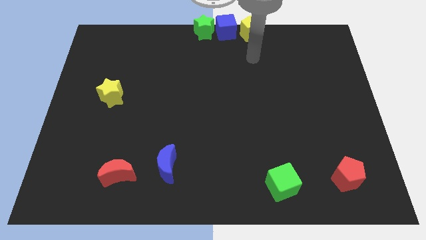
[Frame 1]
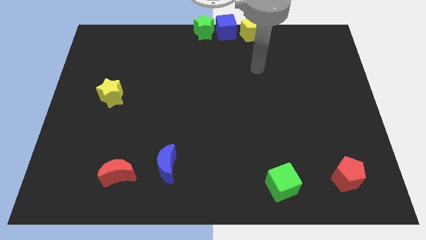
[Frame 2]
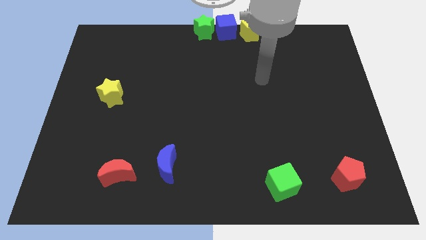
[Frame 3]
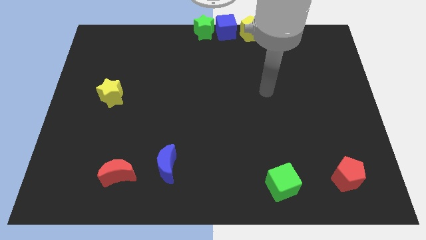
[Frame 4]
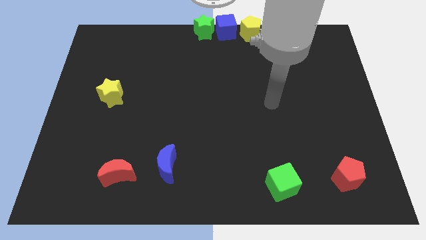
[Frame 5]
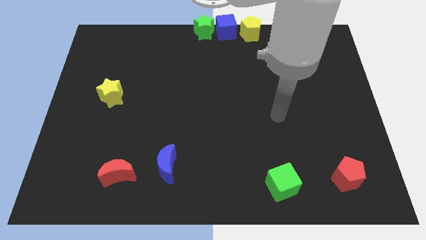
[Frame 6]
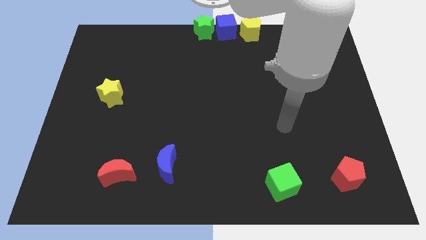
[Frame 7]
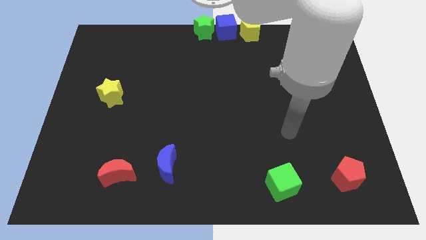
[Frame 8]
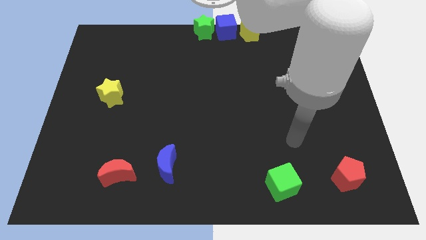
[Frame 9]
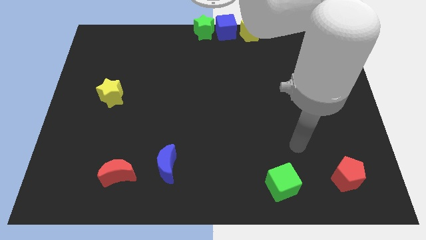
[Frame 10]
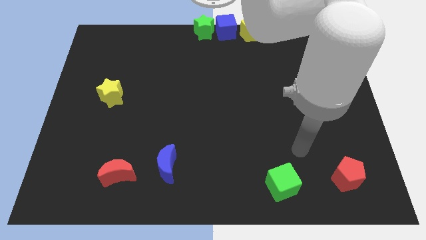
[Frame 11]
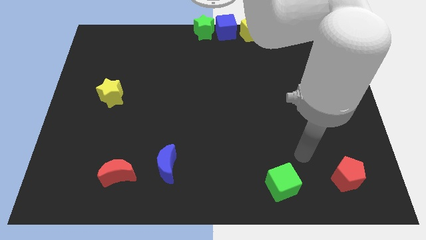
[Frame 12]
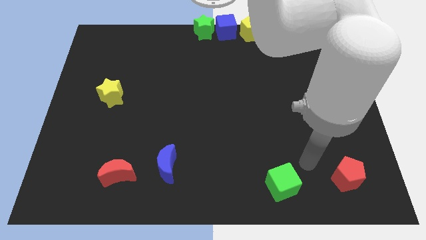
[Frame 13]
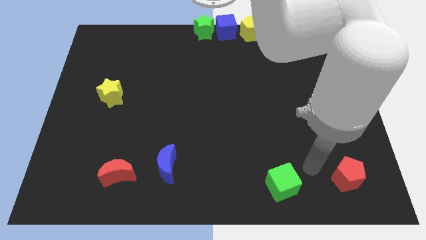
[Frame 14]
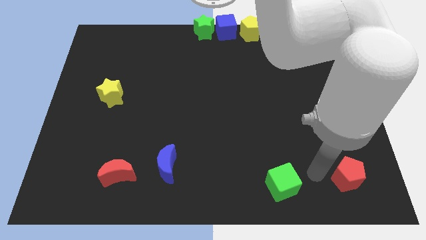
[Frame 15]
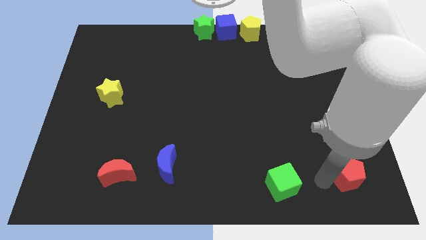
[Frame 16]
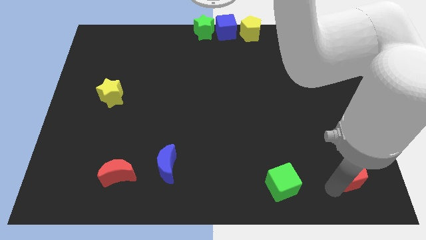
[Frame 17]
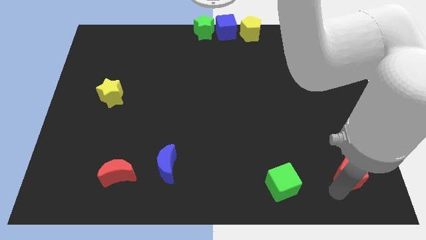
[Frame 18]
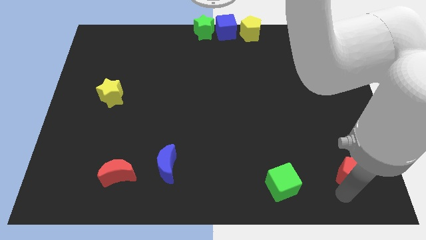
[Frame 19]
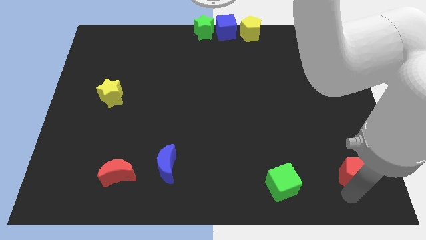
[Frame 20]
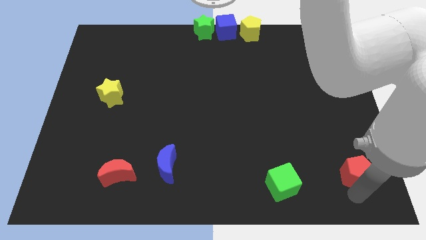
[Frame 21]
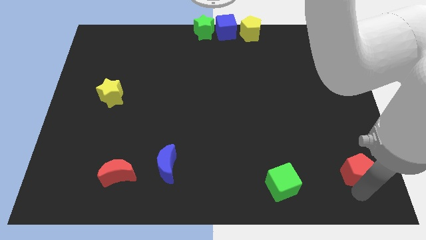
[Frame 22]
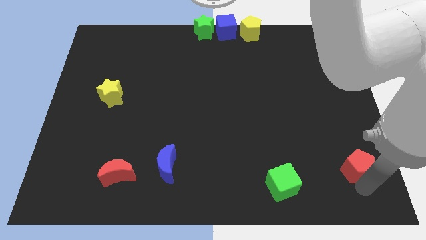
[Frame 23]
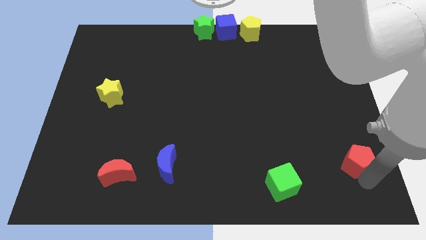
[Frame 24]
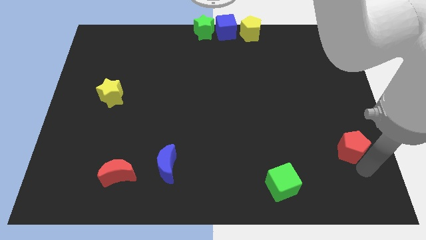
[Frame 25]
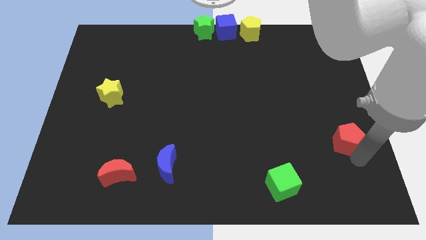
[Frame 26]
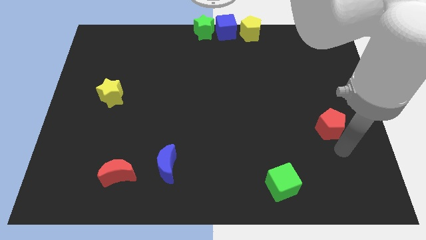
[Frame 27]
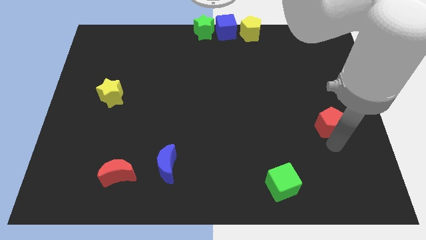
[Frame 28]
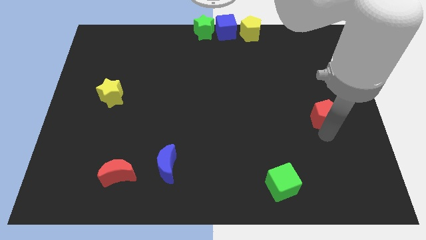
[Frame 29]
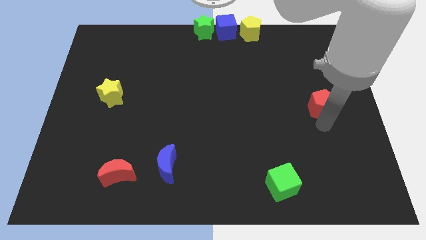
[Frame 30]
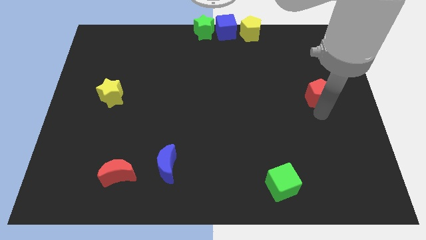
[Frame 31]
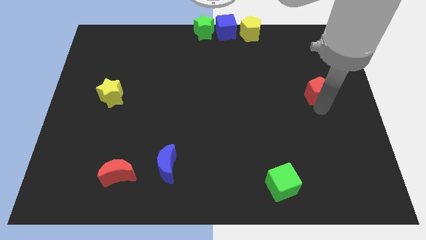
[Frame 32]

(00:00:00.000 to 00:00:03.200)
move red pentagon upwards

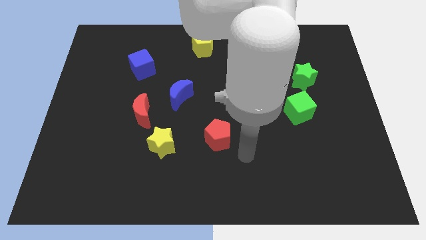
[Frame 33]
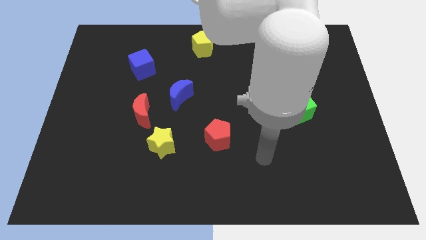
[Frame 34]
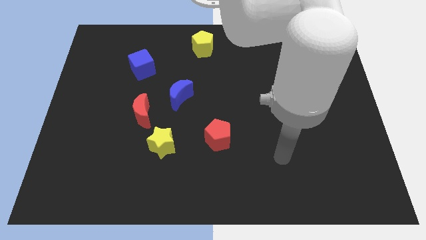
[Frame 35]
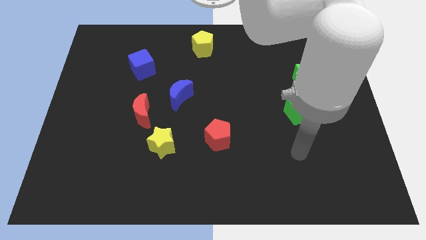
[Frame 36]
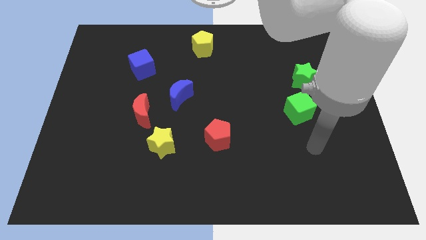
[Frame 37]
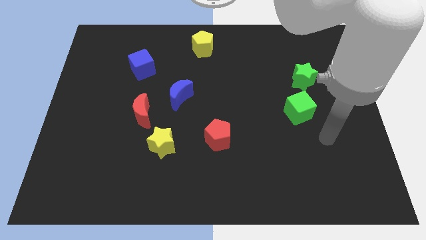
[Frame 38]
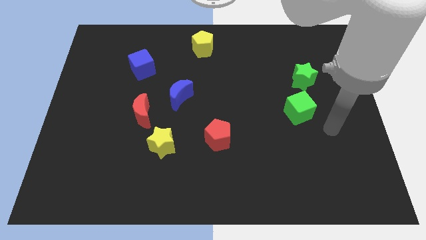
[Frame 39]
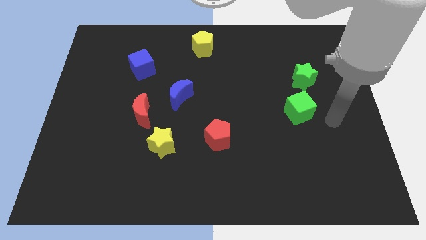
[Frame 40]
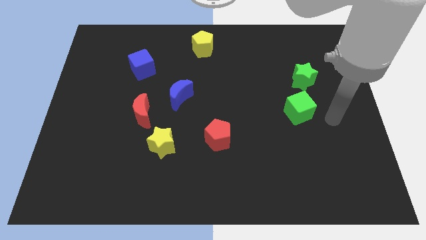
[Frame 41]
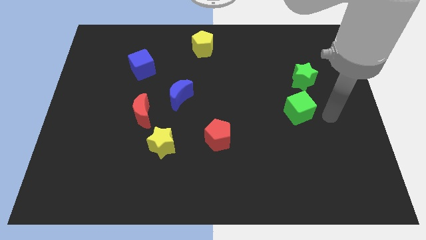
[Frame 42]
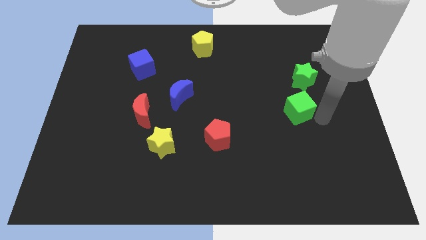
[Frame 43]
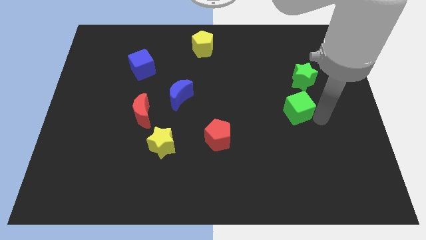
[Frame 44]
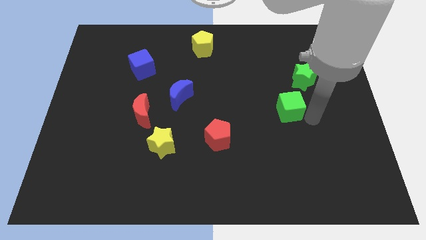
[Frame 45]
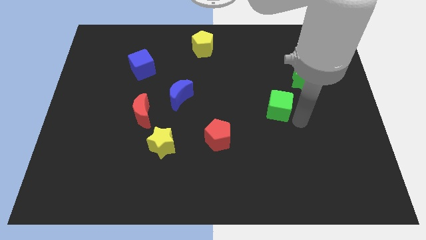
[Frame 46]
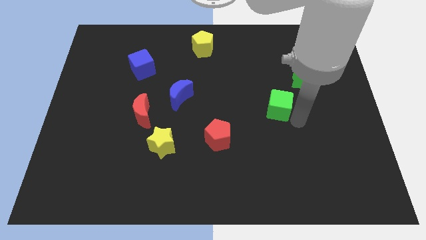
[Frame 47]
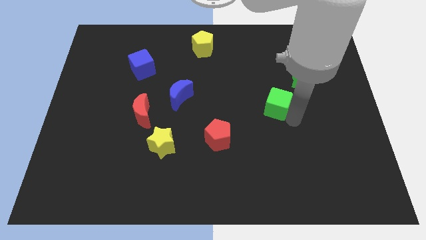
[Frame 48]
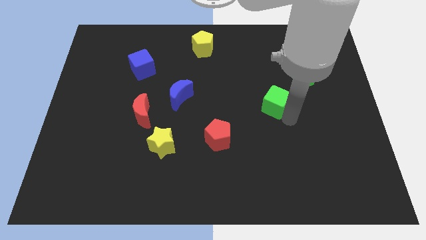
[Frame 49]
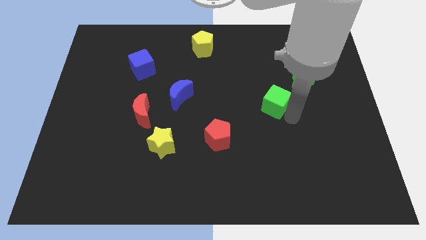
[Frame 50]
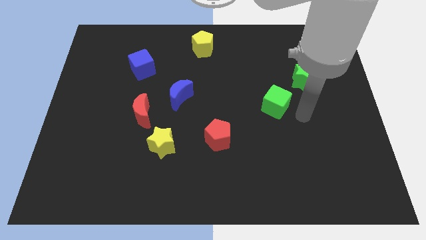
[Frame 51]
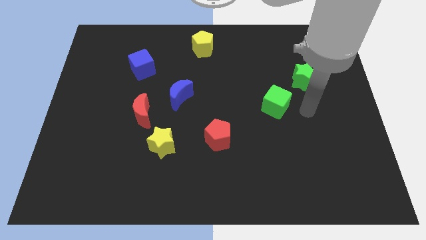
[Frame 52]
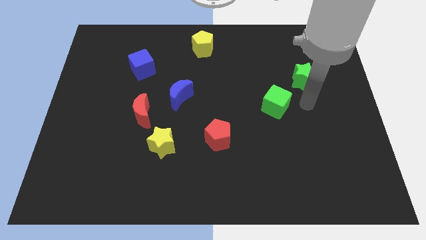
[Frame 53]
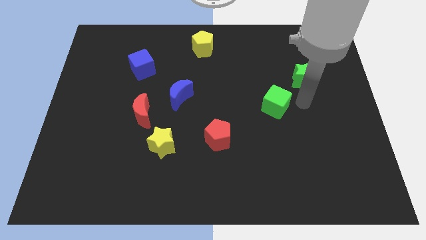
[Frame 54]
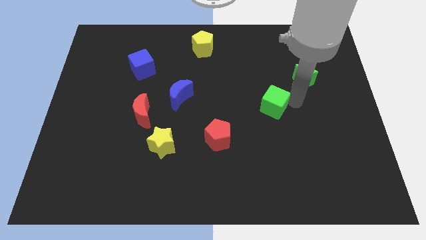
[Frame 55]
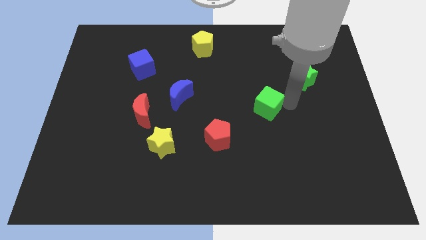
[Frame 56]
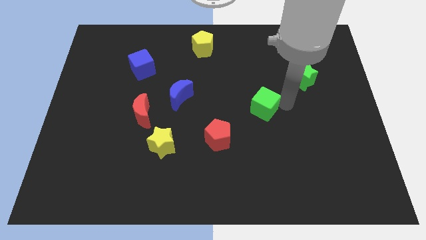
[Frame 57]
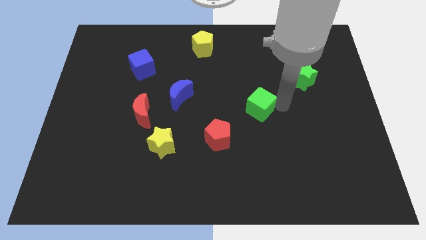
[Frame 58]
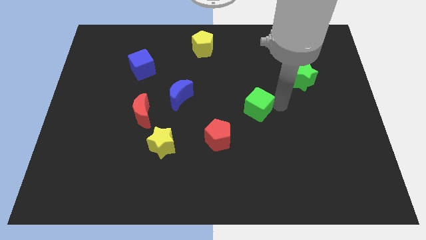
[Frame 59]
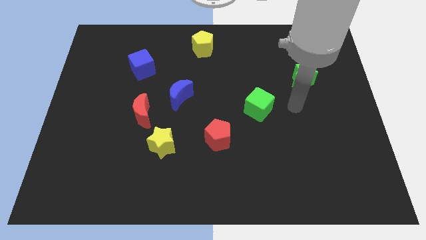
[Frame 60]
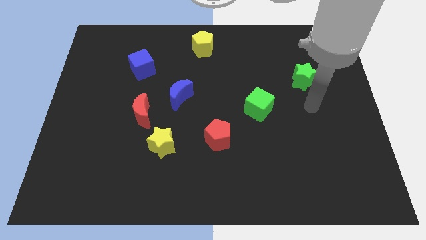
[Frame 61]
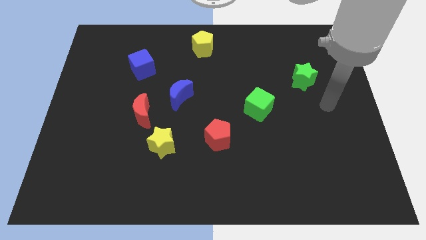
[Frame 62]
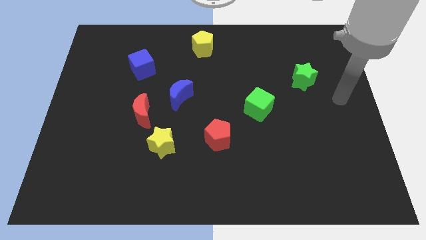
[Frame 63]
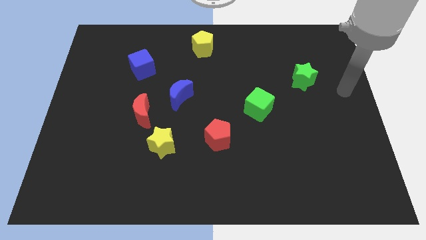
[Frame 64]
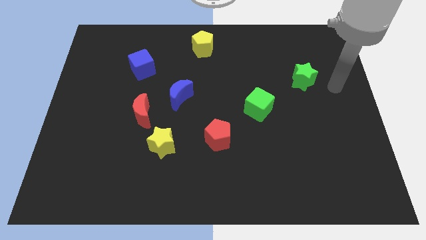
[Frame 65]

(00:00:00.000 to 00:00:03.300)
place the green cube in between the red pentagon and the green star

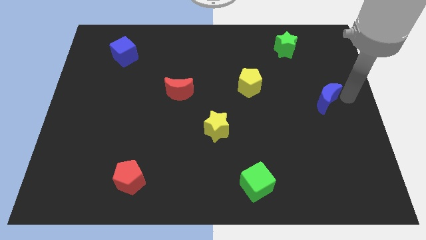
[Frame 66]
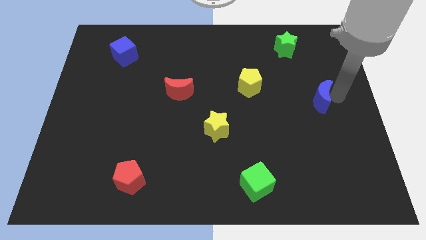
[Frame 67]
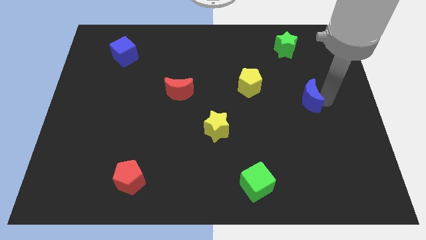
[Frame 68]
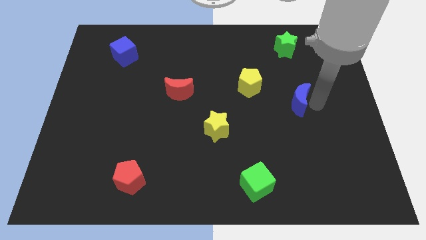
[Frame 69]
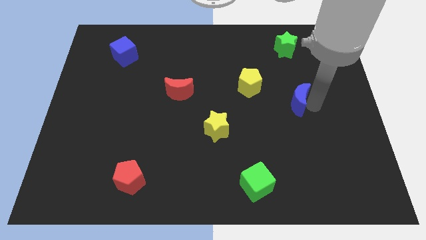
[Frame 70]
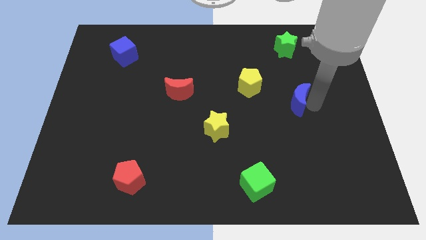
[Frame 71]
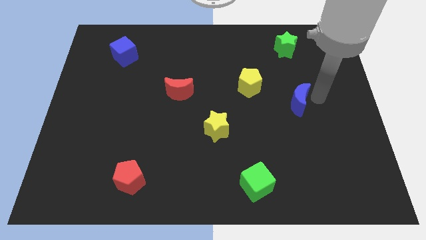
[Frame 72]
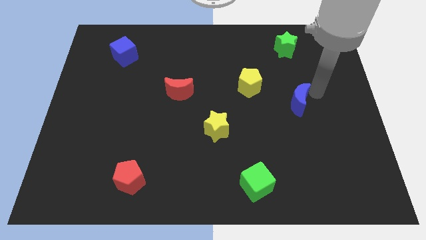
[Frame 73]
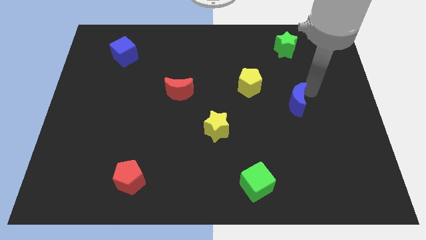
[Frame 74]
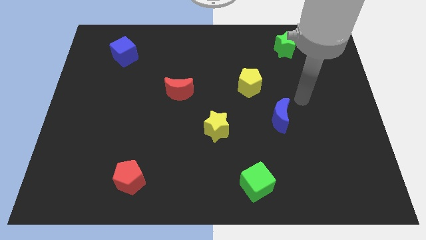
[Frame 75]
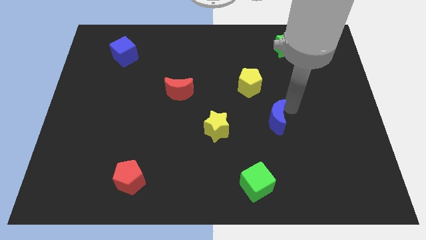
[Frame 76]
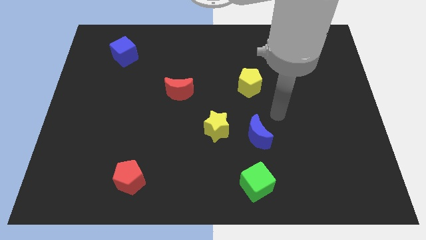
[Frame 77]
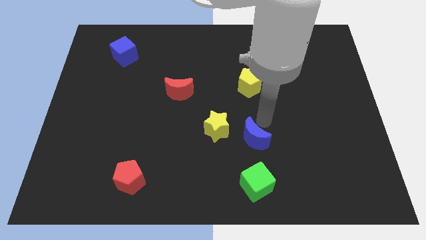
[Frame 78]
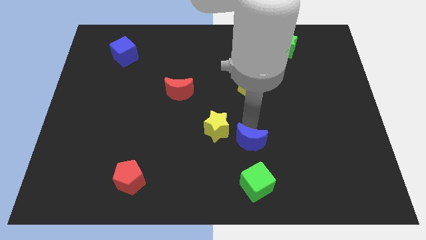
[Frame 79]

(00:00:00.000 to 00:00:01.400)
move the blue moon vertically below the yellow pentagon

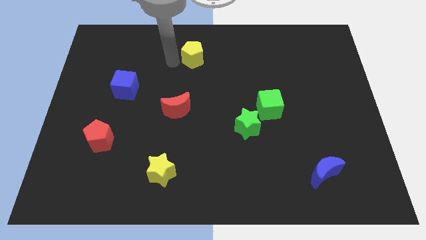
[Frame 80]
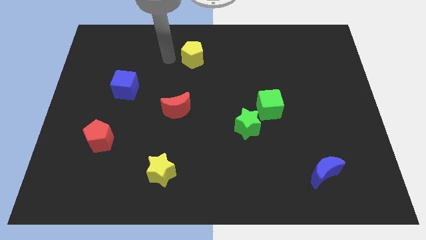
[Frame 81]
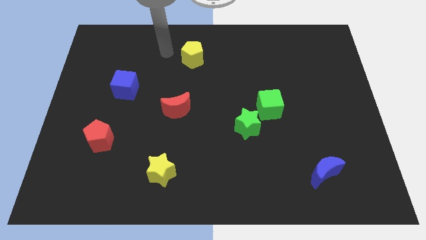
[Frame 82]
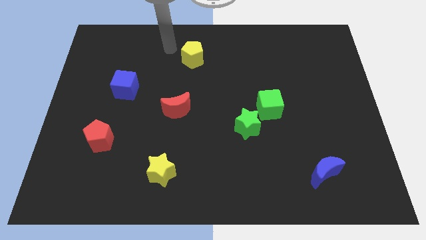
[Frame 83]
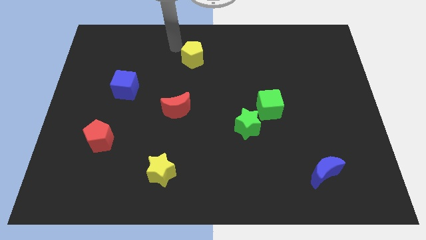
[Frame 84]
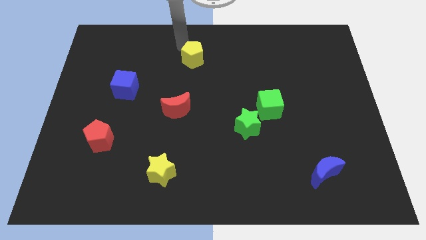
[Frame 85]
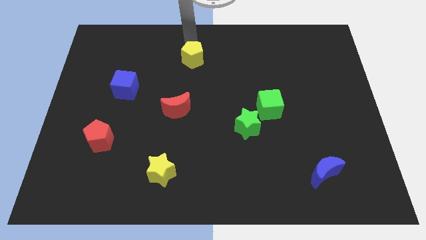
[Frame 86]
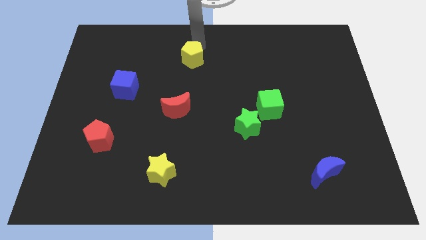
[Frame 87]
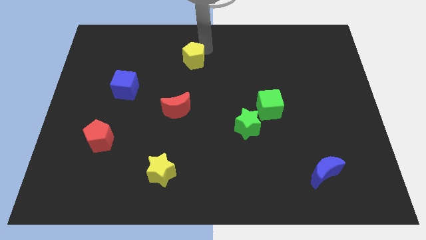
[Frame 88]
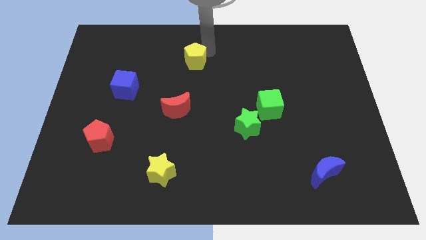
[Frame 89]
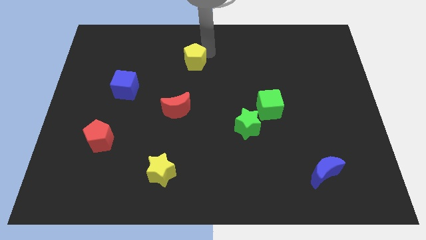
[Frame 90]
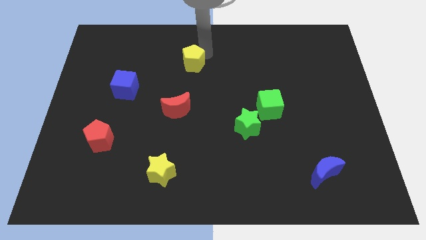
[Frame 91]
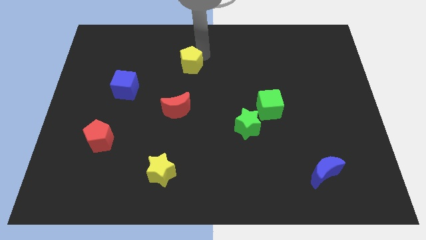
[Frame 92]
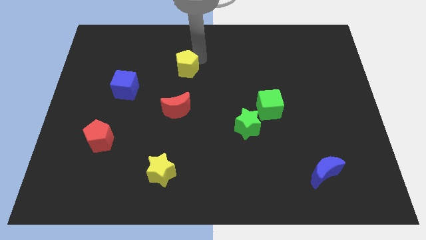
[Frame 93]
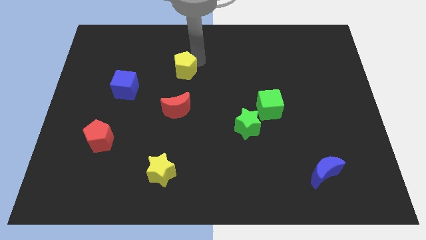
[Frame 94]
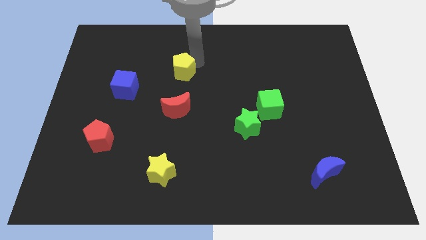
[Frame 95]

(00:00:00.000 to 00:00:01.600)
move the yellow pentagon to the bottom of the board
